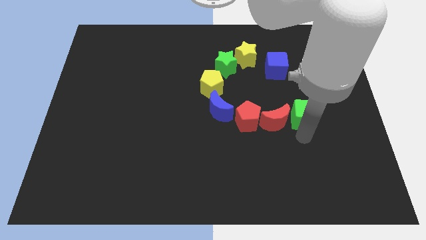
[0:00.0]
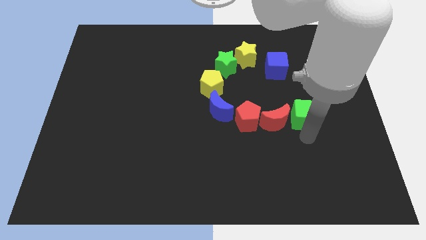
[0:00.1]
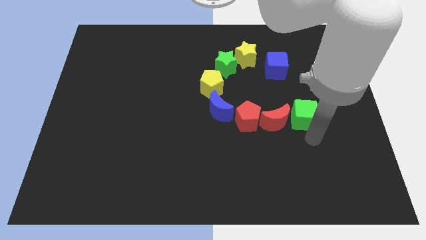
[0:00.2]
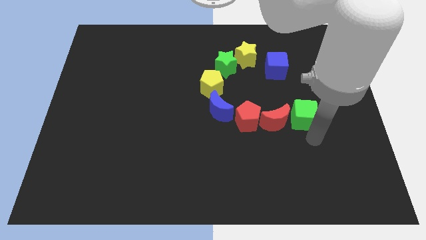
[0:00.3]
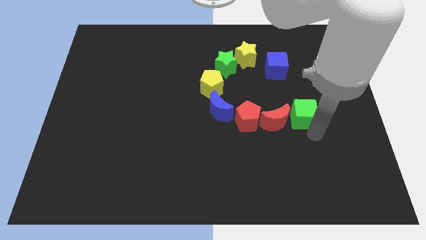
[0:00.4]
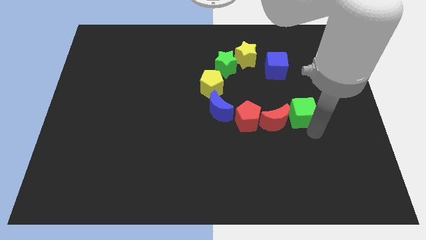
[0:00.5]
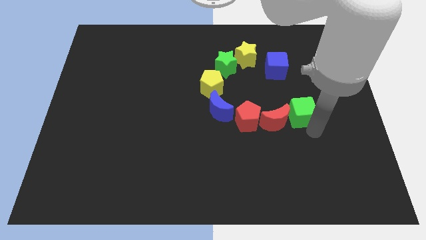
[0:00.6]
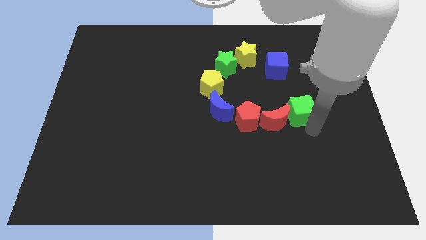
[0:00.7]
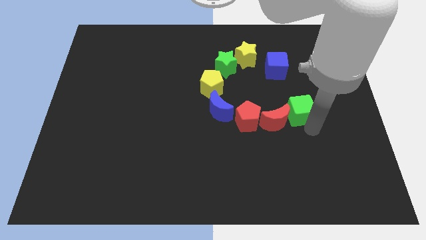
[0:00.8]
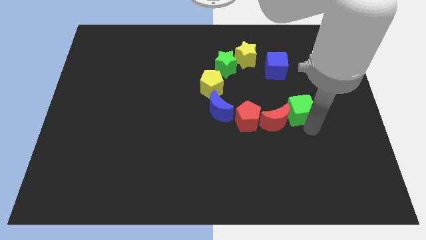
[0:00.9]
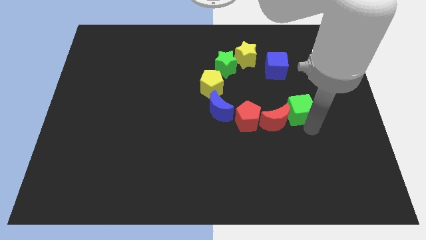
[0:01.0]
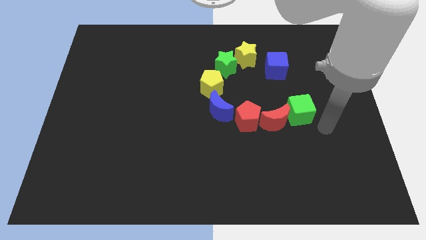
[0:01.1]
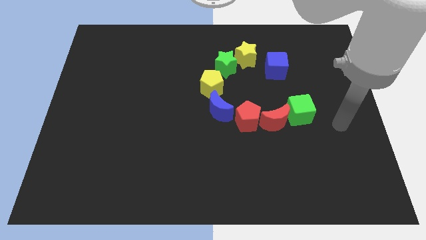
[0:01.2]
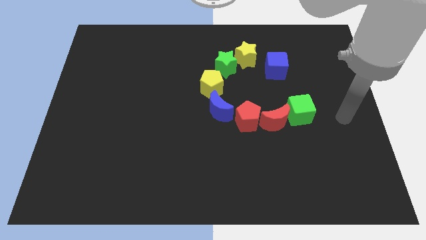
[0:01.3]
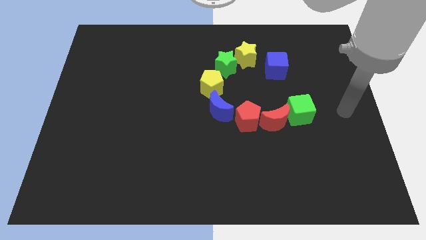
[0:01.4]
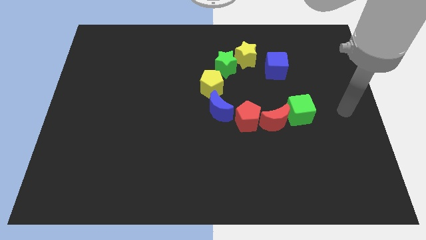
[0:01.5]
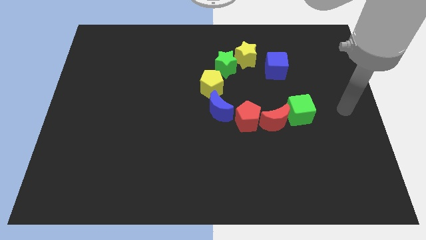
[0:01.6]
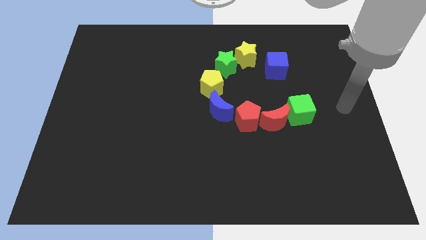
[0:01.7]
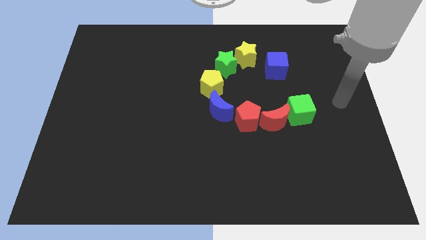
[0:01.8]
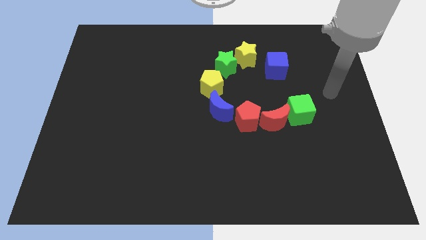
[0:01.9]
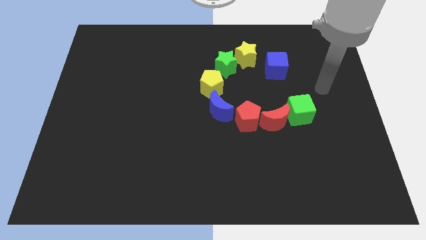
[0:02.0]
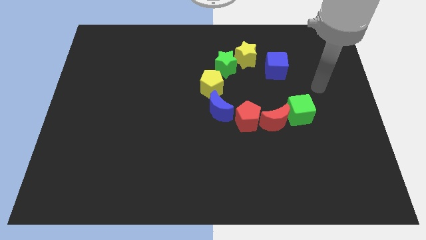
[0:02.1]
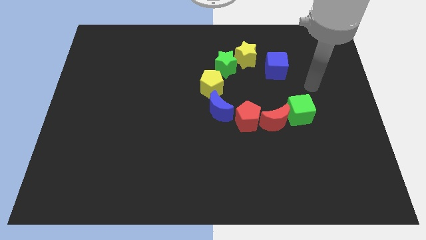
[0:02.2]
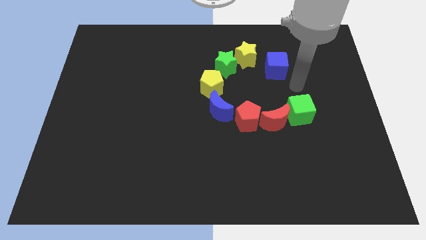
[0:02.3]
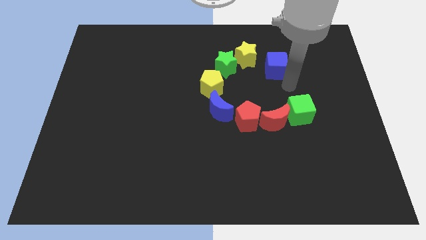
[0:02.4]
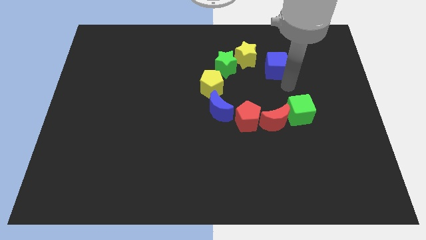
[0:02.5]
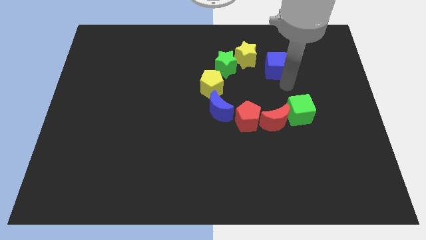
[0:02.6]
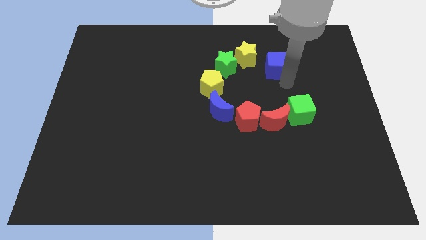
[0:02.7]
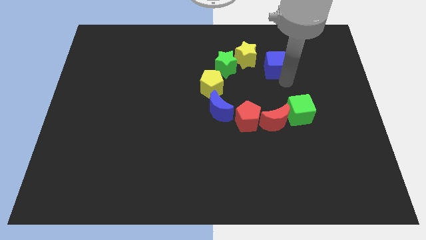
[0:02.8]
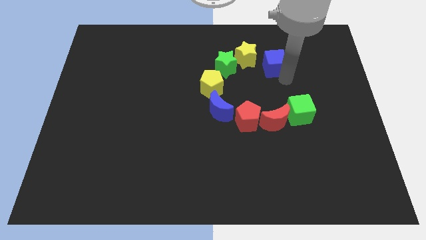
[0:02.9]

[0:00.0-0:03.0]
move arm to the blue cube

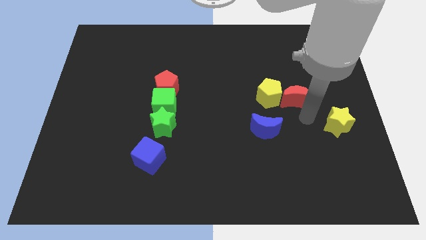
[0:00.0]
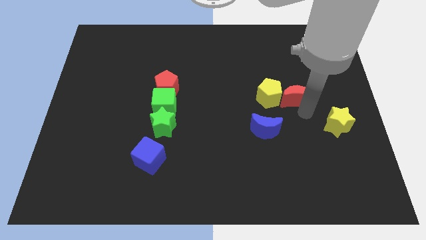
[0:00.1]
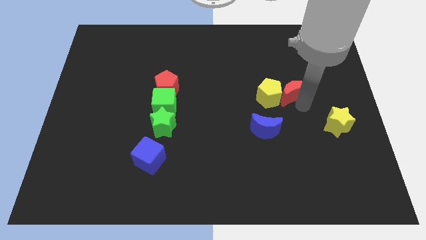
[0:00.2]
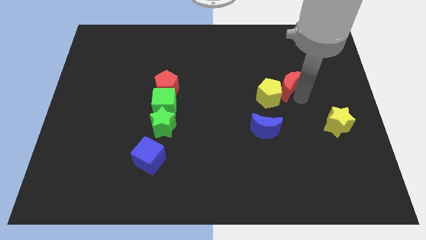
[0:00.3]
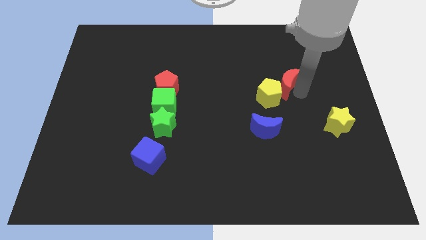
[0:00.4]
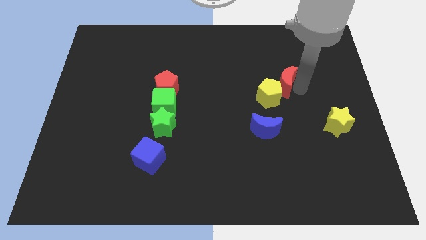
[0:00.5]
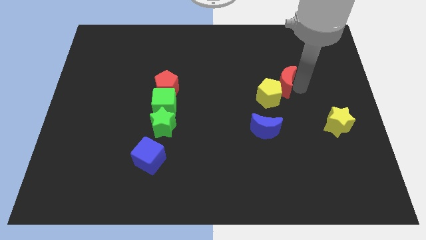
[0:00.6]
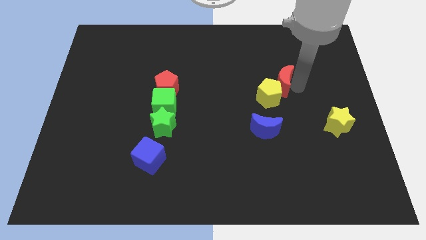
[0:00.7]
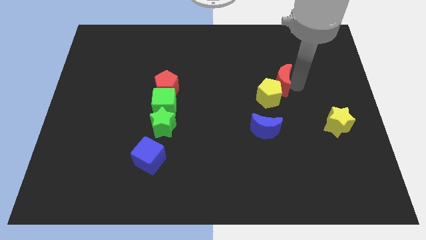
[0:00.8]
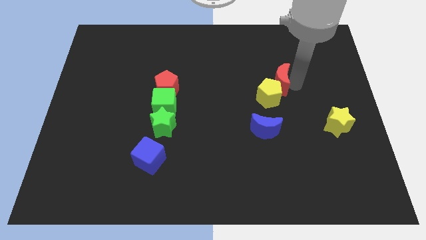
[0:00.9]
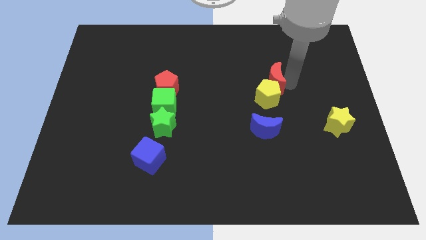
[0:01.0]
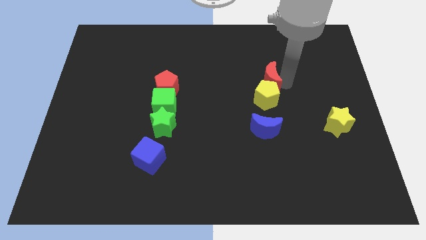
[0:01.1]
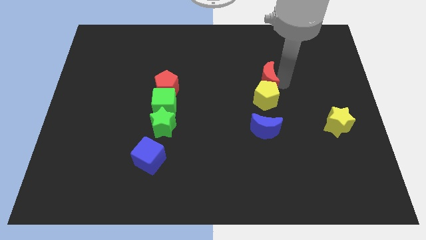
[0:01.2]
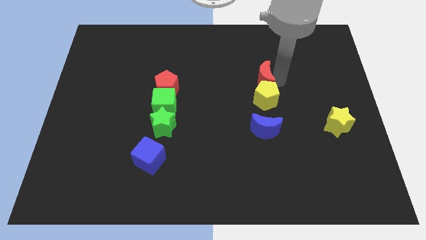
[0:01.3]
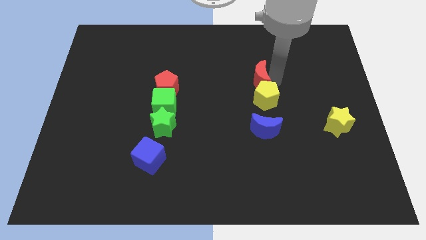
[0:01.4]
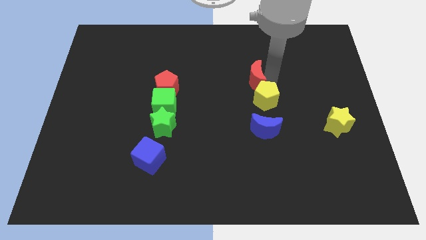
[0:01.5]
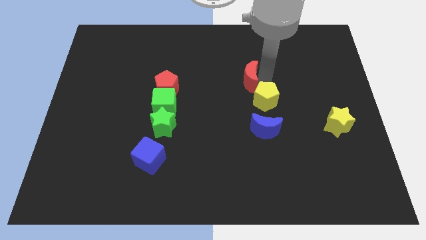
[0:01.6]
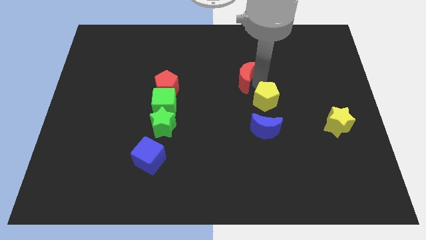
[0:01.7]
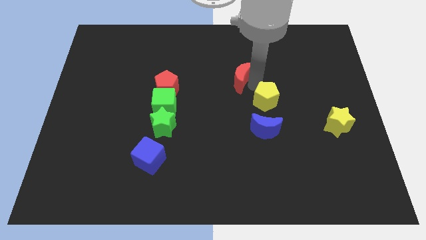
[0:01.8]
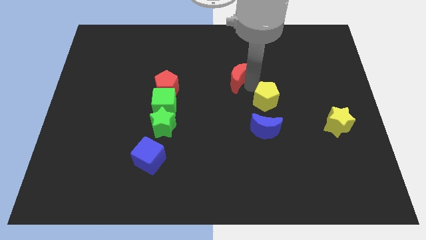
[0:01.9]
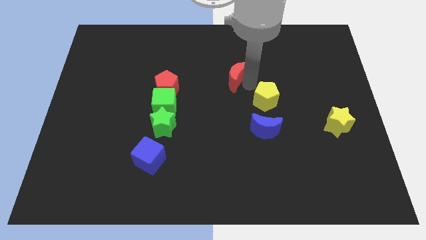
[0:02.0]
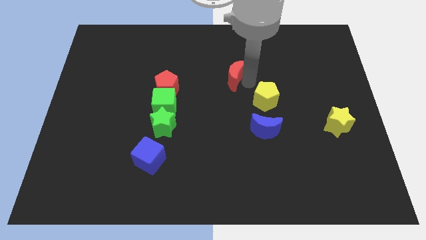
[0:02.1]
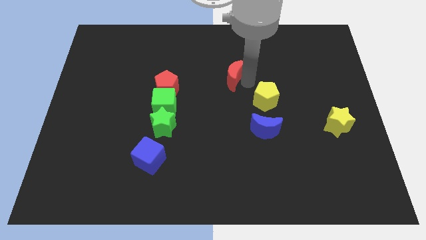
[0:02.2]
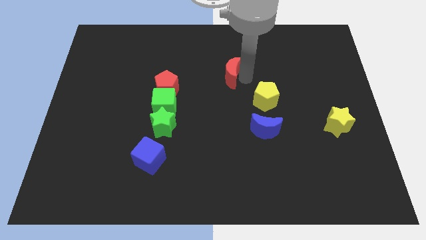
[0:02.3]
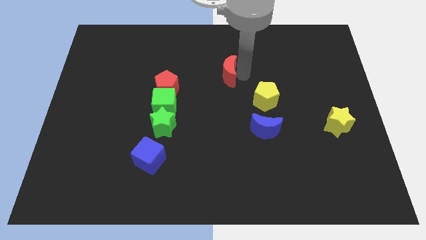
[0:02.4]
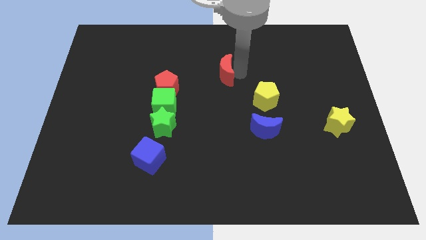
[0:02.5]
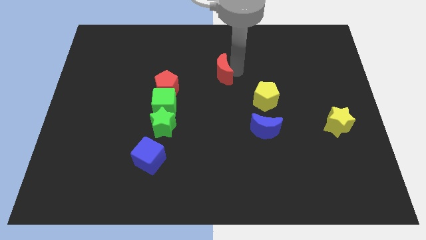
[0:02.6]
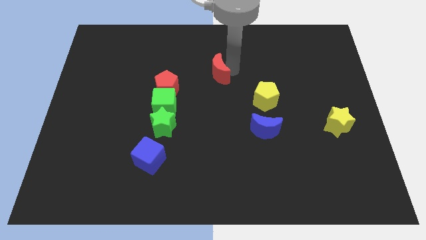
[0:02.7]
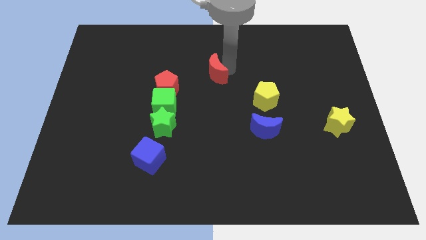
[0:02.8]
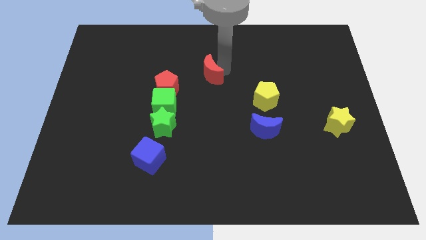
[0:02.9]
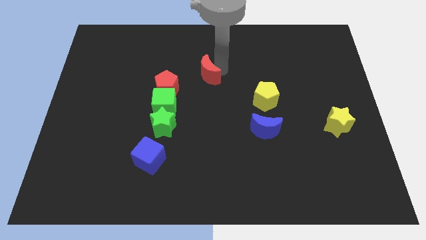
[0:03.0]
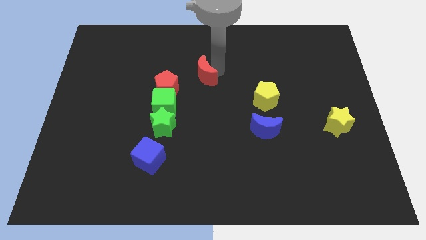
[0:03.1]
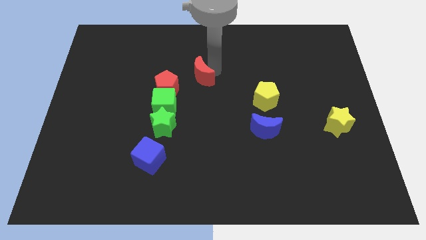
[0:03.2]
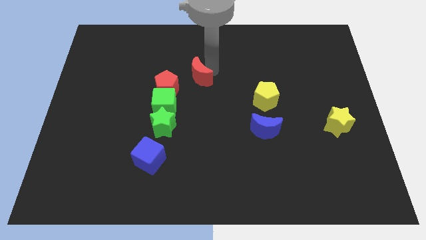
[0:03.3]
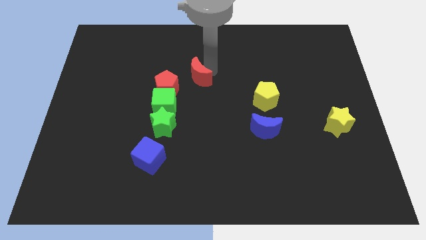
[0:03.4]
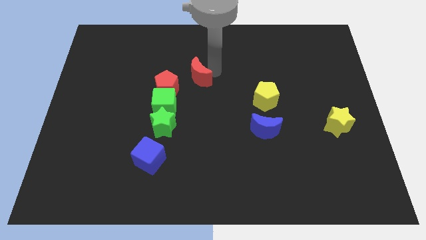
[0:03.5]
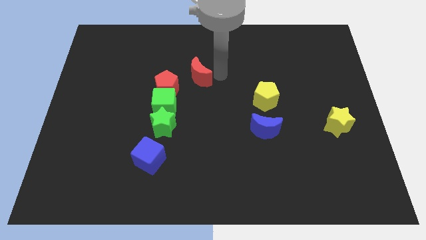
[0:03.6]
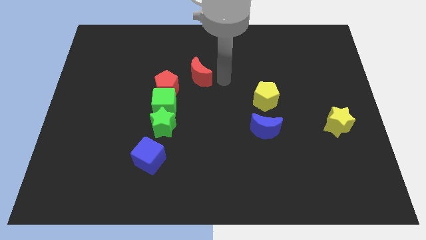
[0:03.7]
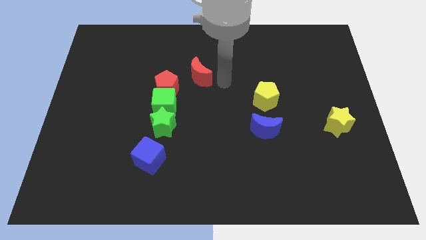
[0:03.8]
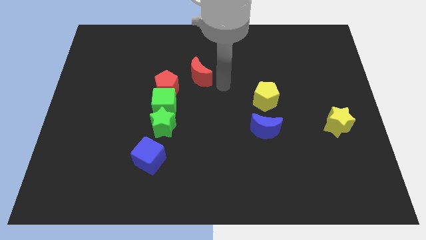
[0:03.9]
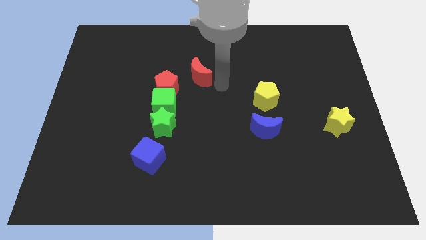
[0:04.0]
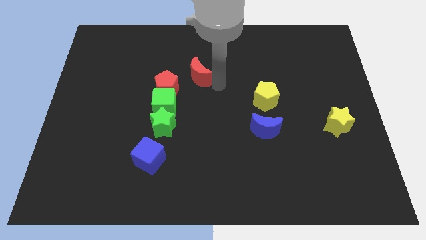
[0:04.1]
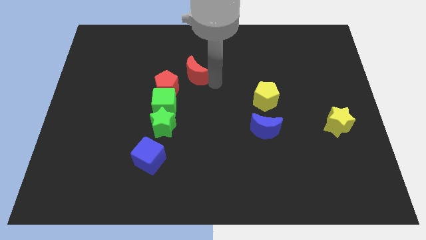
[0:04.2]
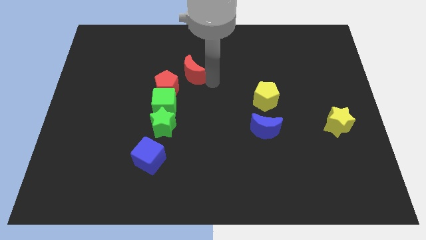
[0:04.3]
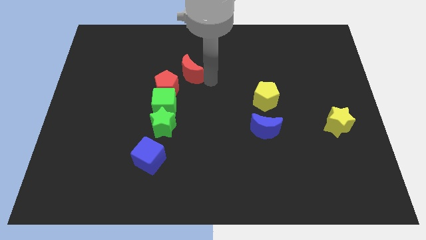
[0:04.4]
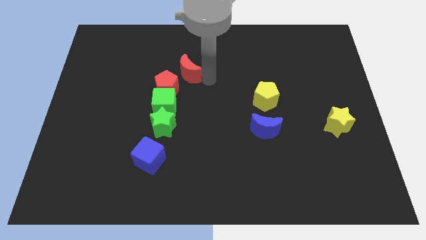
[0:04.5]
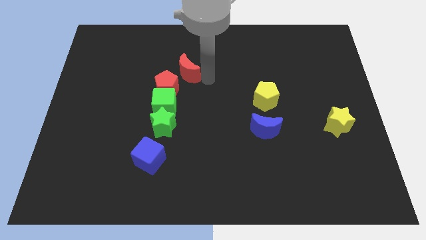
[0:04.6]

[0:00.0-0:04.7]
move the red crescent to the left of the board

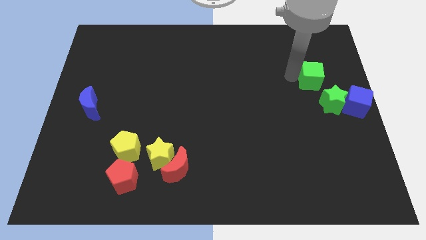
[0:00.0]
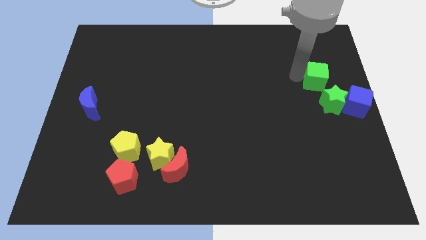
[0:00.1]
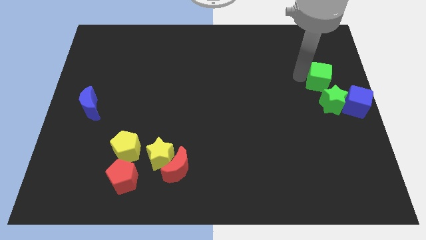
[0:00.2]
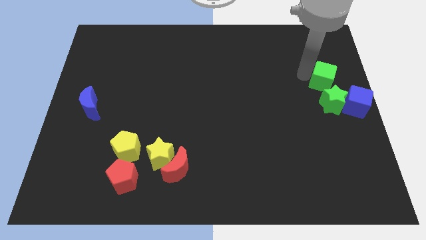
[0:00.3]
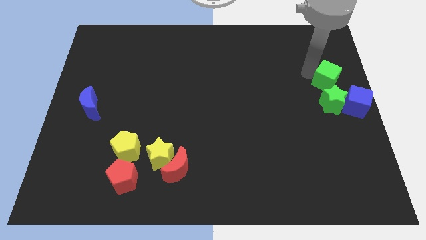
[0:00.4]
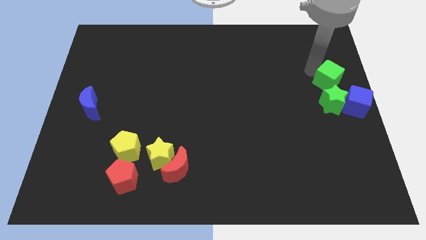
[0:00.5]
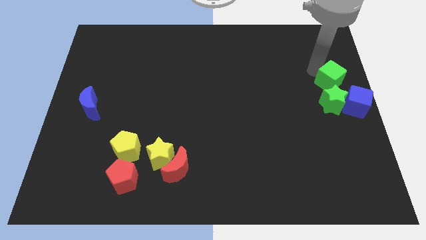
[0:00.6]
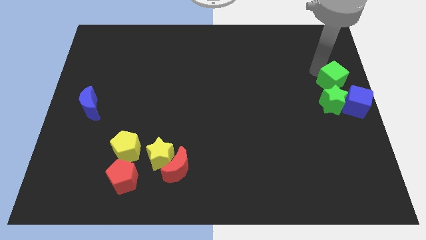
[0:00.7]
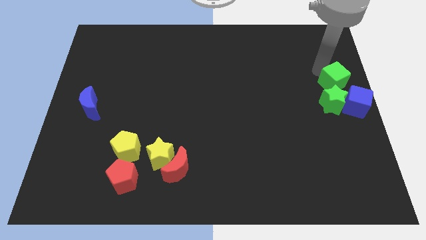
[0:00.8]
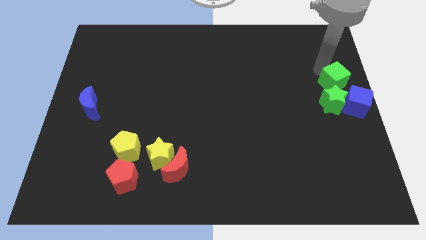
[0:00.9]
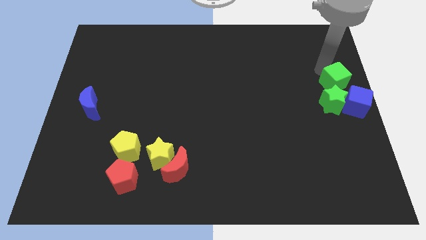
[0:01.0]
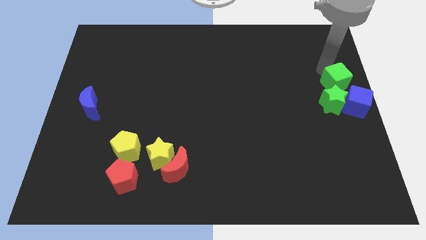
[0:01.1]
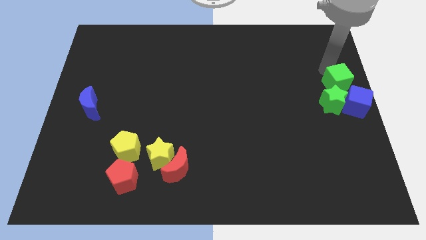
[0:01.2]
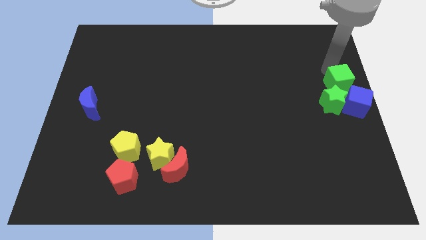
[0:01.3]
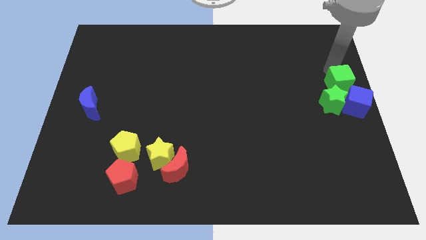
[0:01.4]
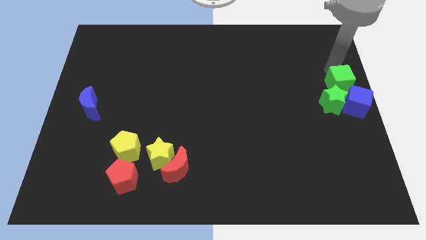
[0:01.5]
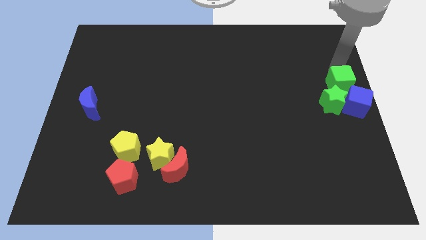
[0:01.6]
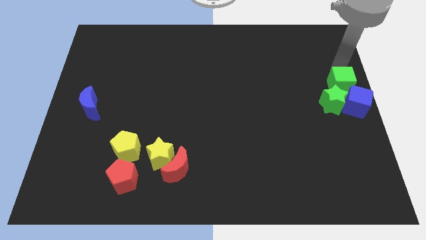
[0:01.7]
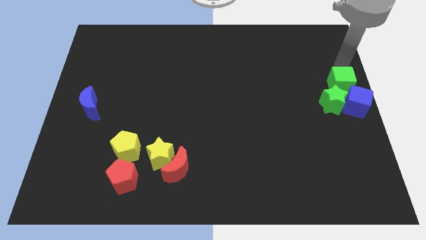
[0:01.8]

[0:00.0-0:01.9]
move the green cube above the green star and blue cube
